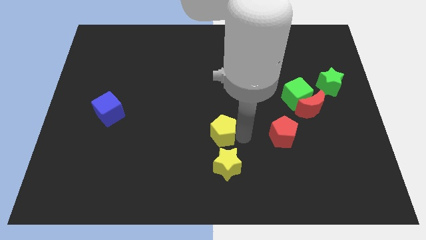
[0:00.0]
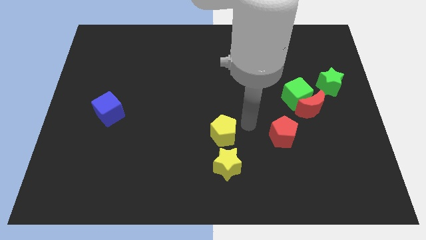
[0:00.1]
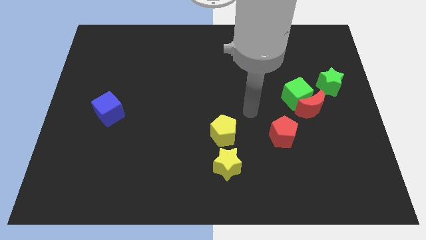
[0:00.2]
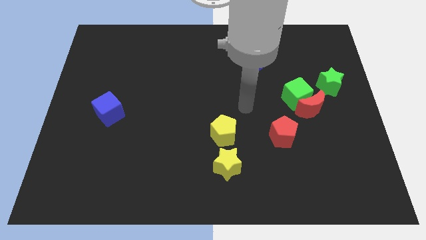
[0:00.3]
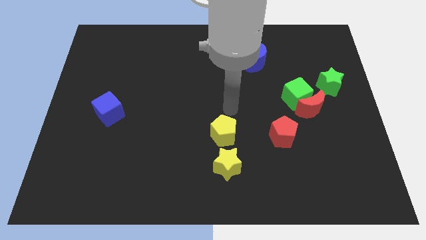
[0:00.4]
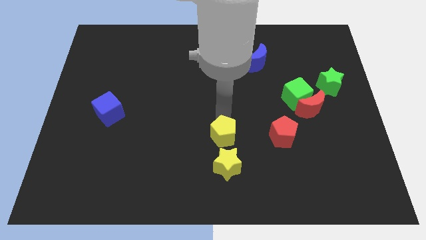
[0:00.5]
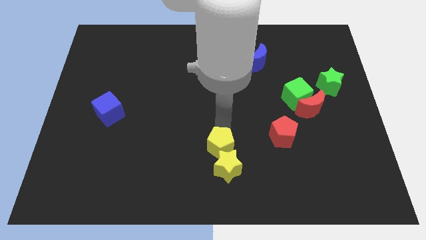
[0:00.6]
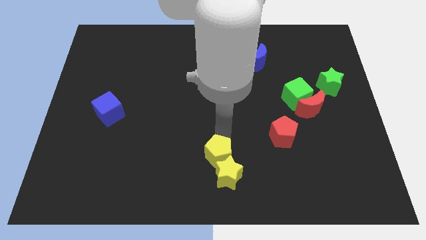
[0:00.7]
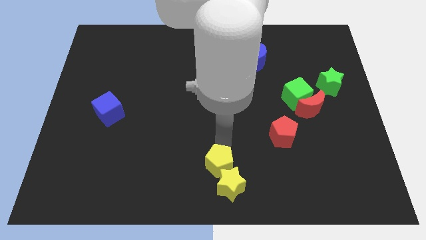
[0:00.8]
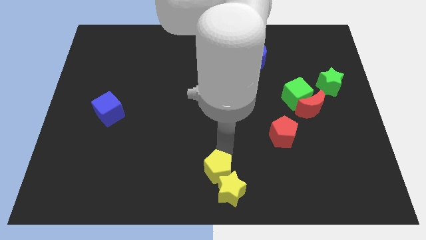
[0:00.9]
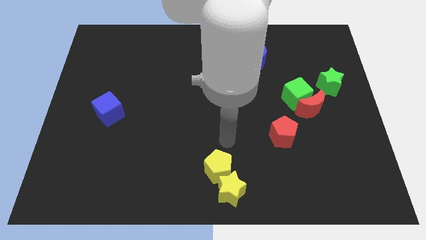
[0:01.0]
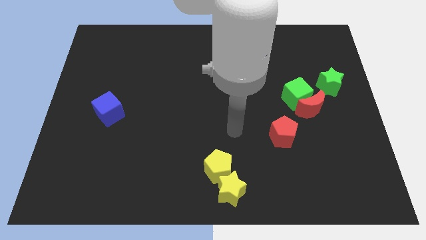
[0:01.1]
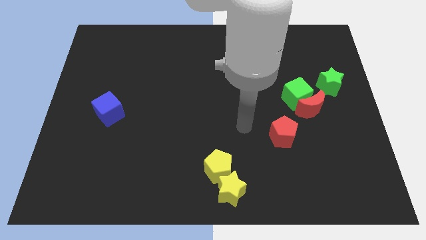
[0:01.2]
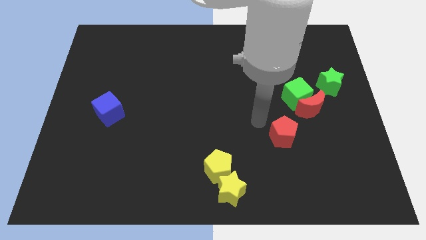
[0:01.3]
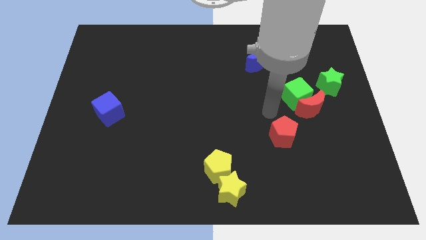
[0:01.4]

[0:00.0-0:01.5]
push the yellow pentagon into the yellow star

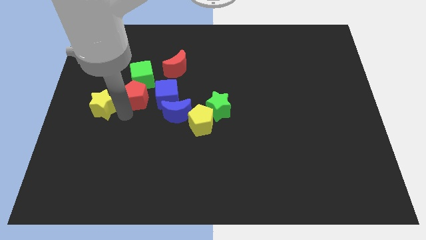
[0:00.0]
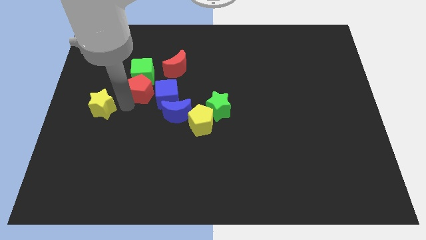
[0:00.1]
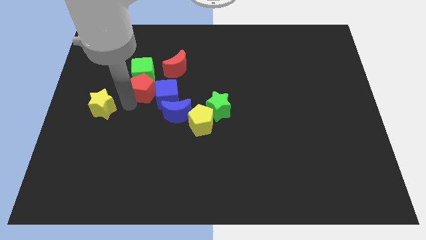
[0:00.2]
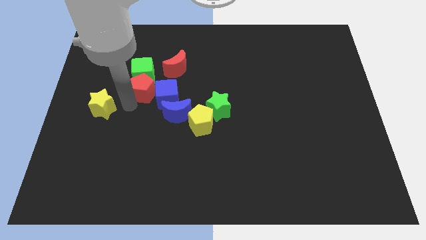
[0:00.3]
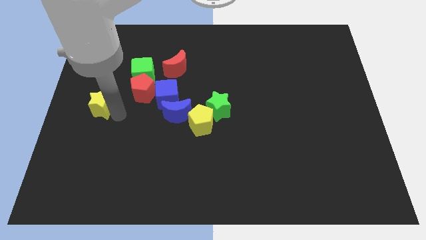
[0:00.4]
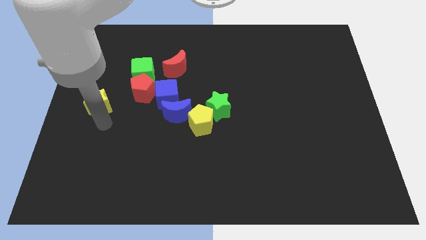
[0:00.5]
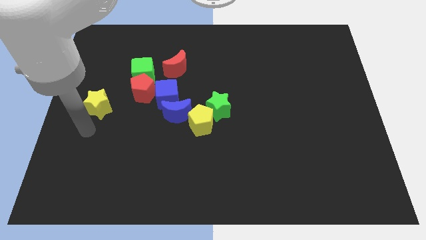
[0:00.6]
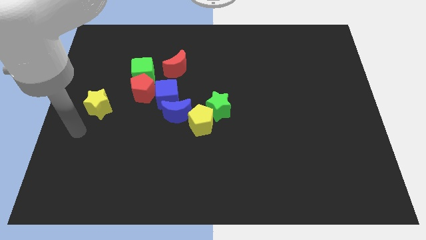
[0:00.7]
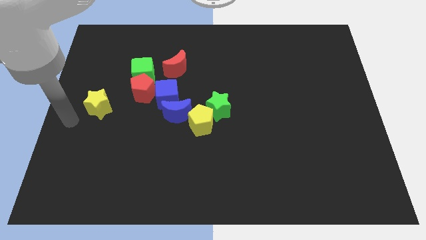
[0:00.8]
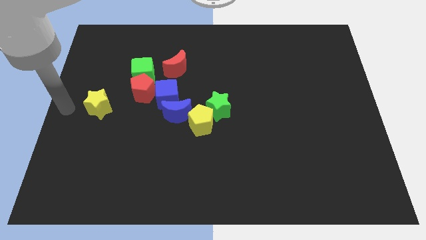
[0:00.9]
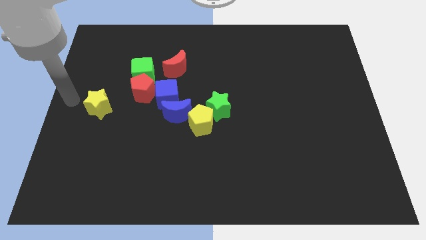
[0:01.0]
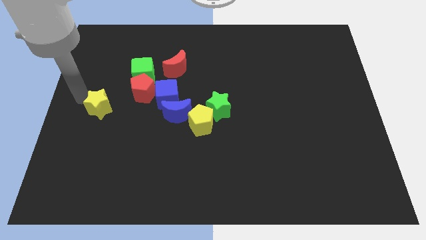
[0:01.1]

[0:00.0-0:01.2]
move your arm to the top left of the yellow star

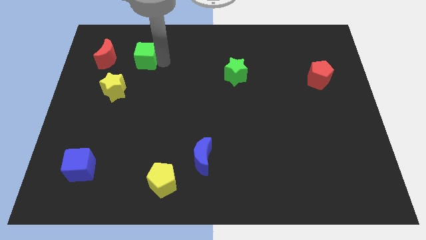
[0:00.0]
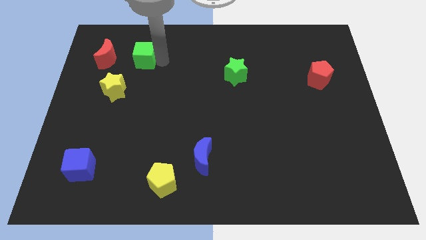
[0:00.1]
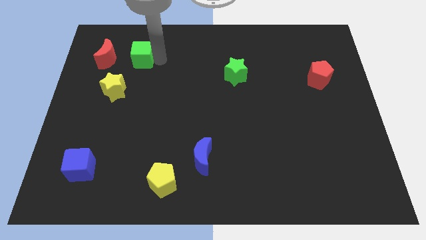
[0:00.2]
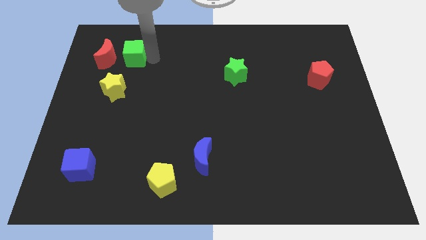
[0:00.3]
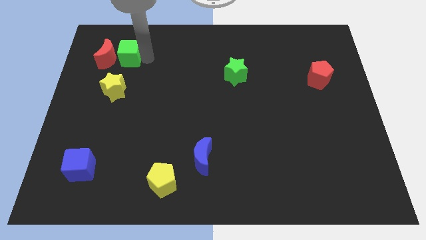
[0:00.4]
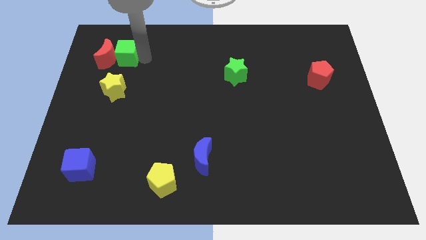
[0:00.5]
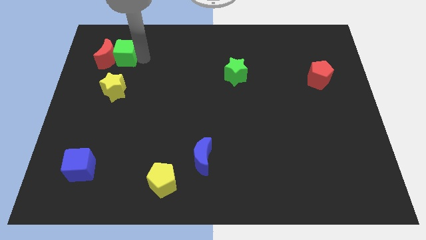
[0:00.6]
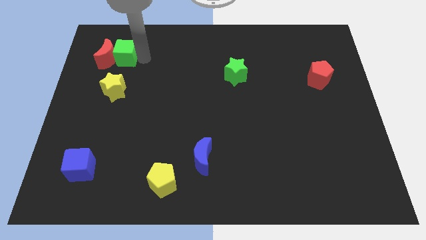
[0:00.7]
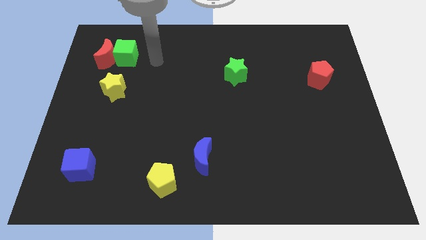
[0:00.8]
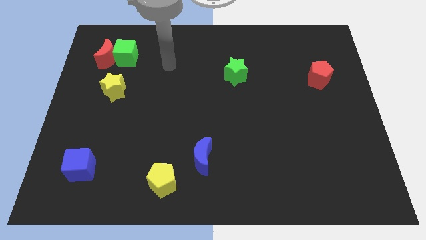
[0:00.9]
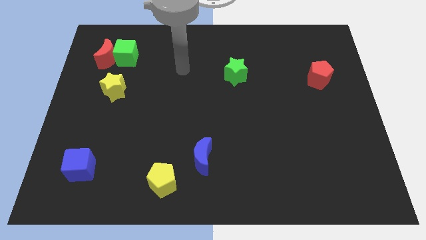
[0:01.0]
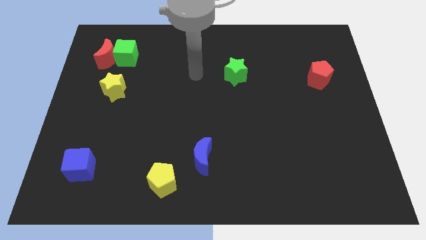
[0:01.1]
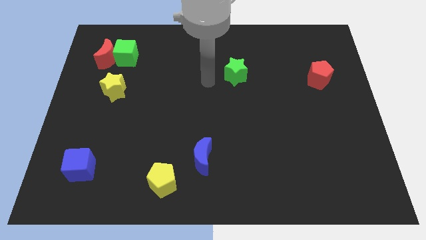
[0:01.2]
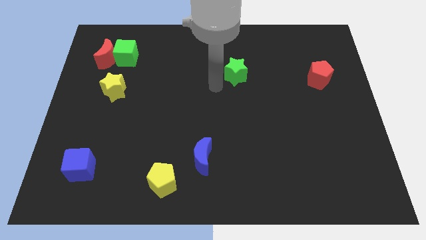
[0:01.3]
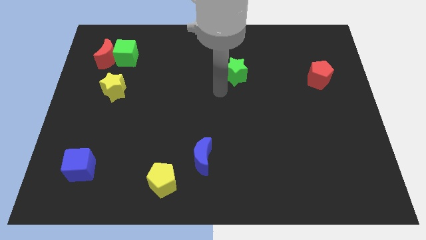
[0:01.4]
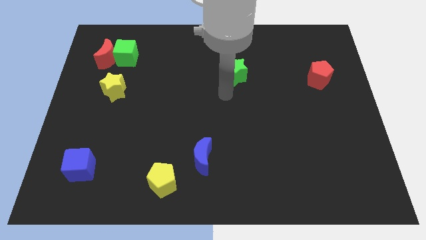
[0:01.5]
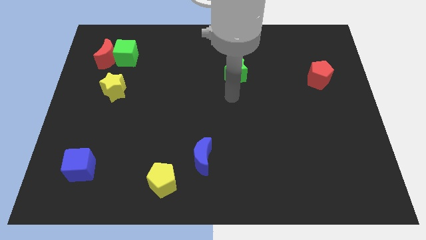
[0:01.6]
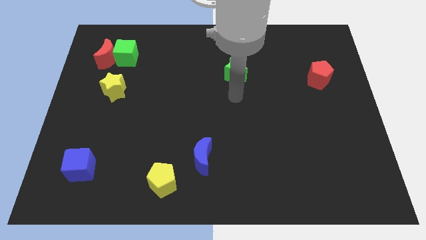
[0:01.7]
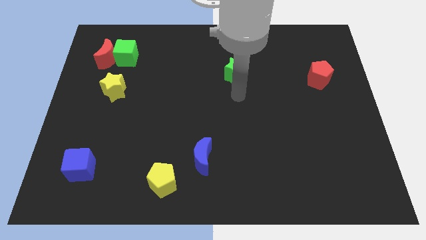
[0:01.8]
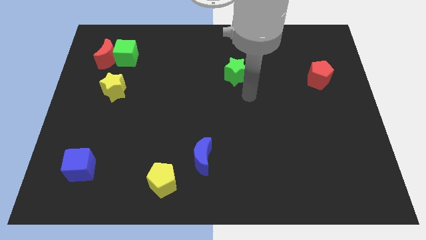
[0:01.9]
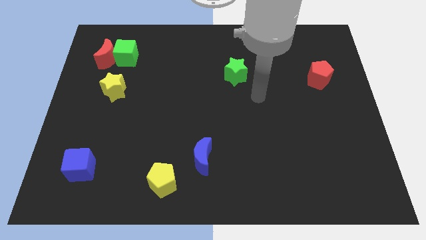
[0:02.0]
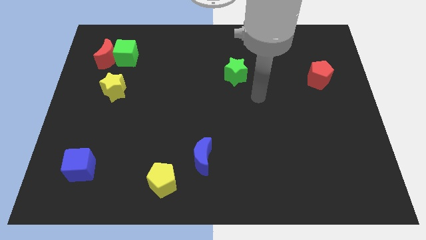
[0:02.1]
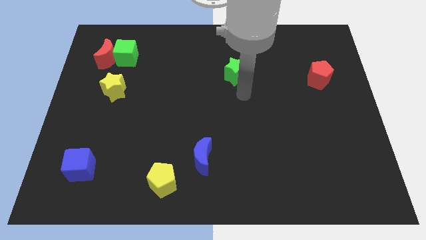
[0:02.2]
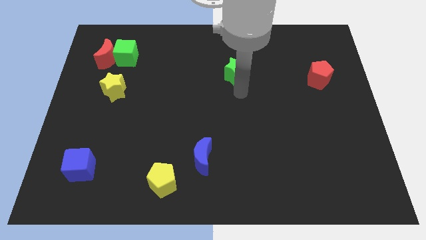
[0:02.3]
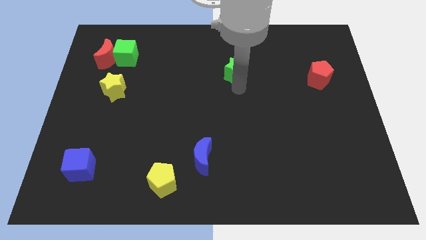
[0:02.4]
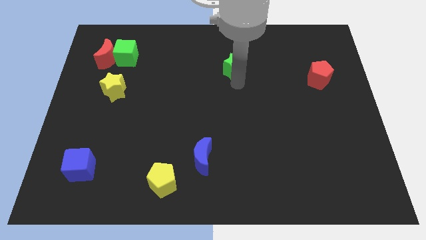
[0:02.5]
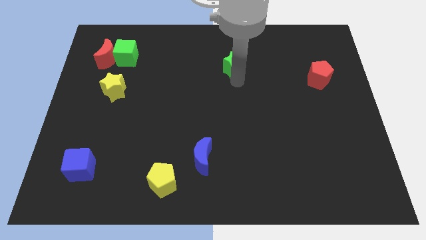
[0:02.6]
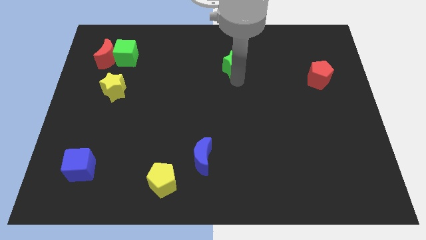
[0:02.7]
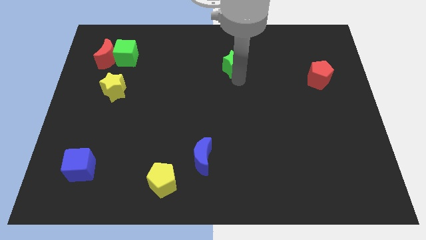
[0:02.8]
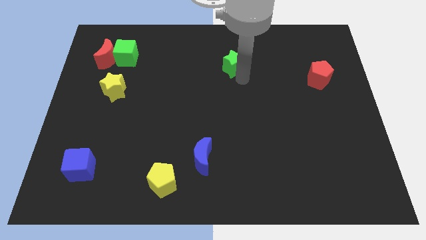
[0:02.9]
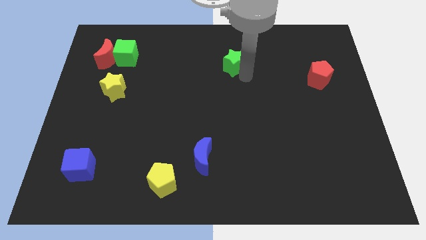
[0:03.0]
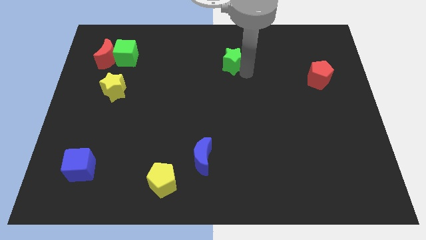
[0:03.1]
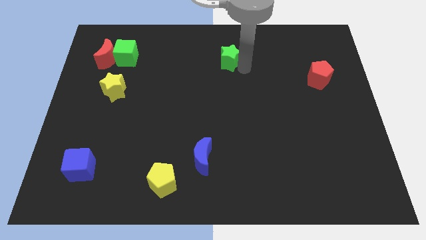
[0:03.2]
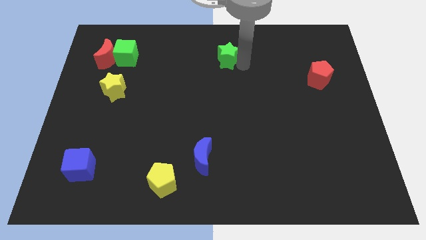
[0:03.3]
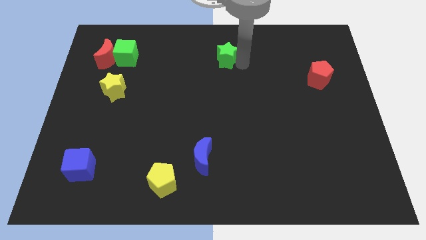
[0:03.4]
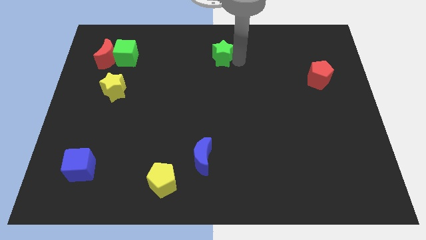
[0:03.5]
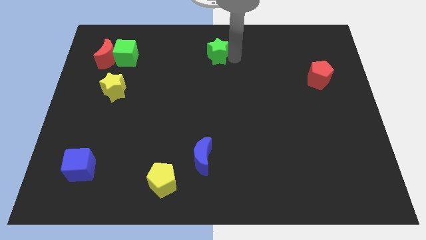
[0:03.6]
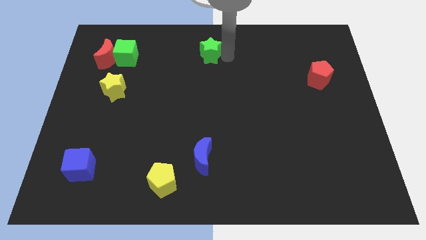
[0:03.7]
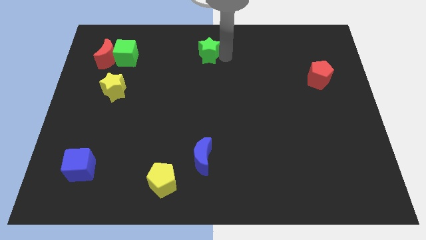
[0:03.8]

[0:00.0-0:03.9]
move the green star to the top center of the board

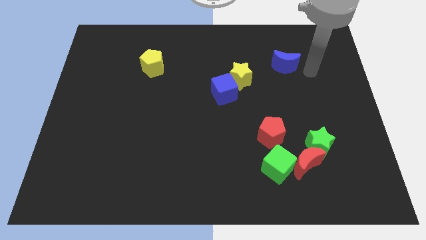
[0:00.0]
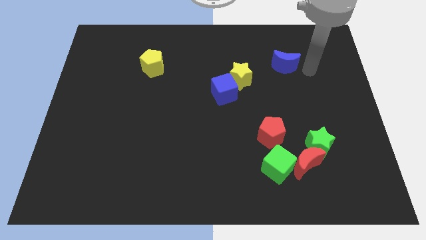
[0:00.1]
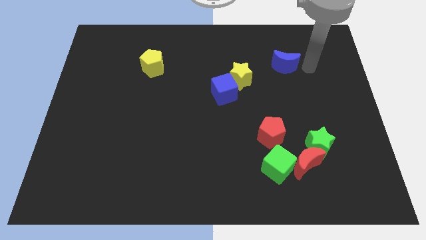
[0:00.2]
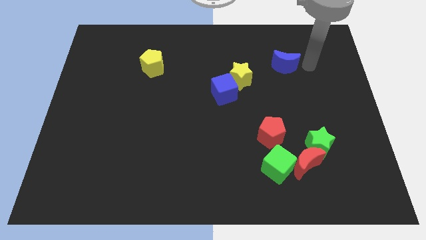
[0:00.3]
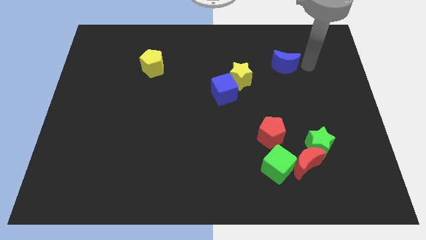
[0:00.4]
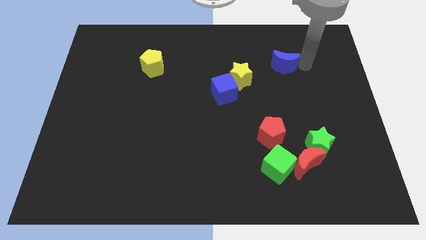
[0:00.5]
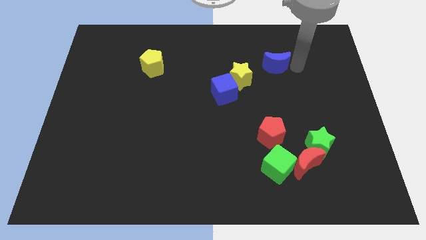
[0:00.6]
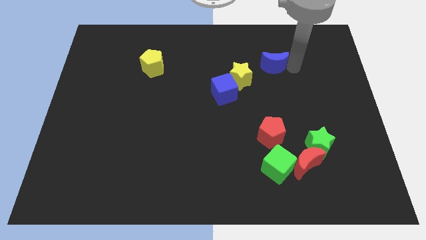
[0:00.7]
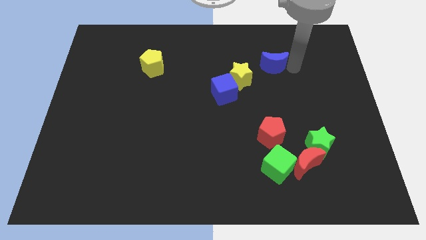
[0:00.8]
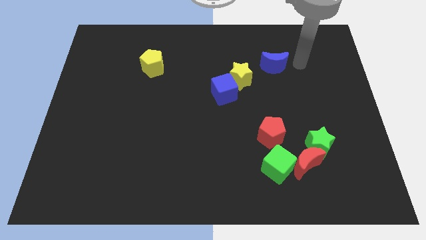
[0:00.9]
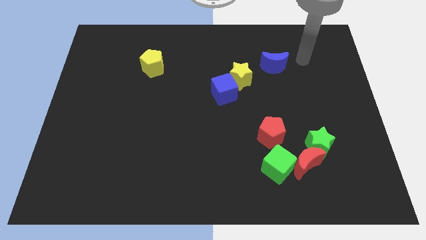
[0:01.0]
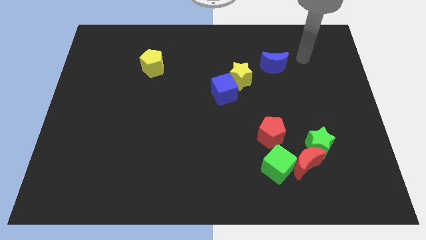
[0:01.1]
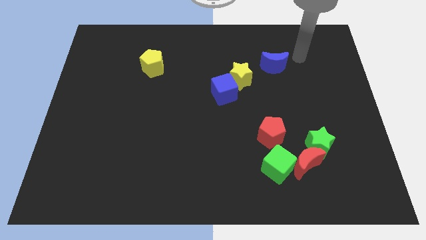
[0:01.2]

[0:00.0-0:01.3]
move the blue moon towards the left

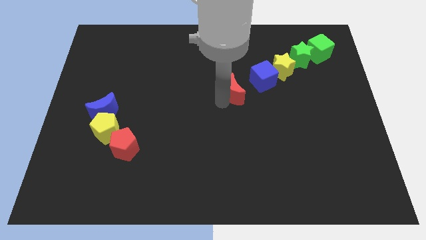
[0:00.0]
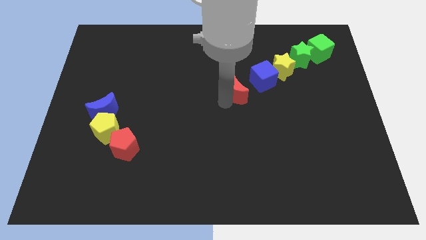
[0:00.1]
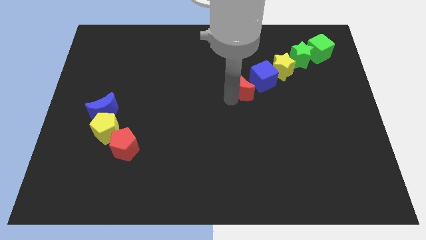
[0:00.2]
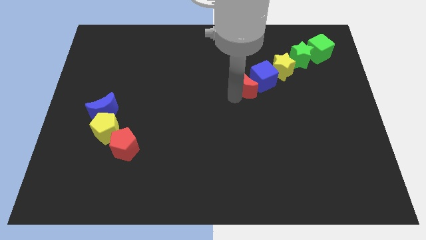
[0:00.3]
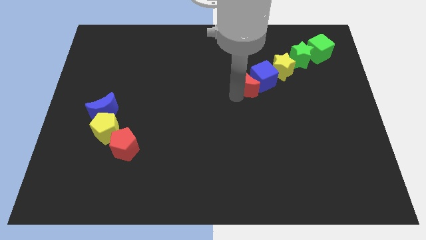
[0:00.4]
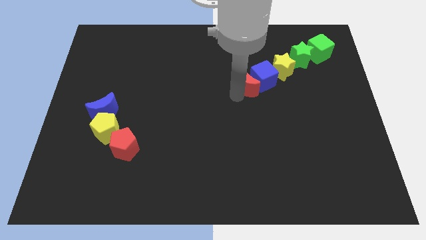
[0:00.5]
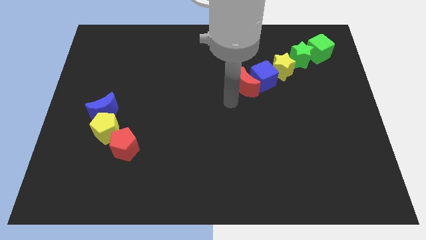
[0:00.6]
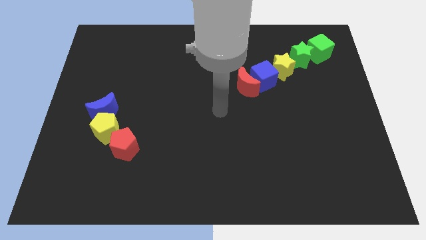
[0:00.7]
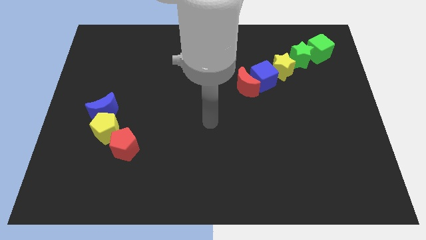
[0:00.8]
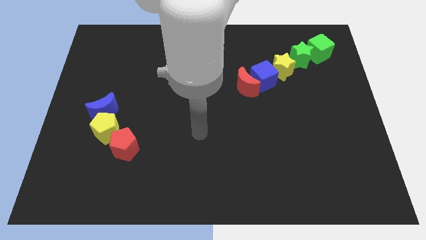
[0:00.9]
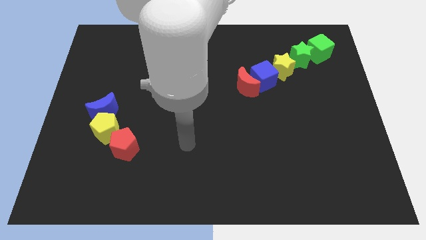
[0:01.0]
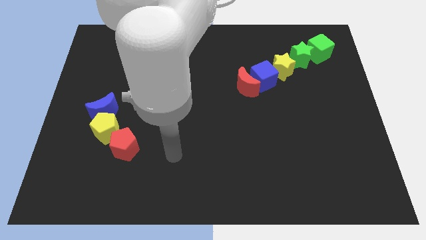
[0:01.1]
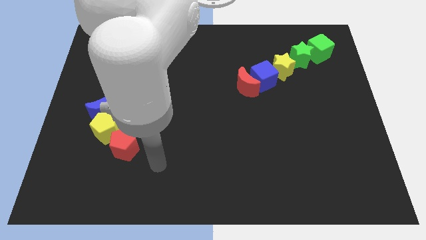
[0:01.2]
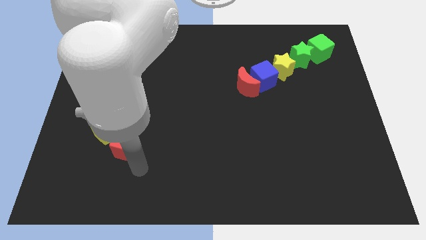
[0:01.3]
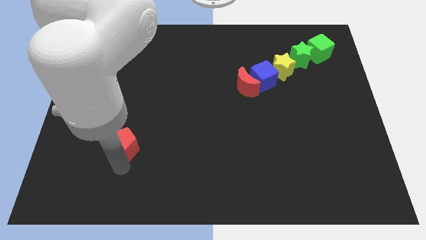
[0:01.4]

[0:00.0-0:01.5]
move the arm away from red crescent
